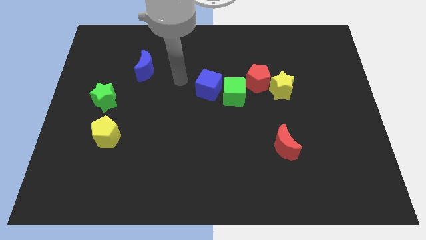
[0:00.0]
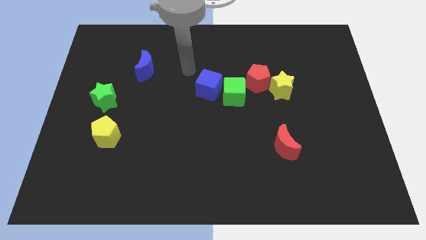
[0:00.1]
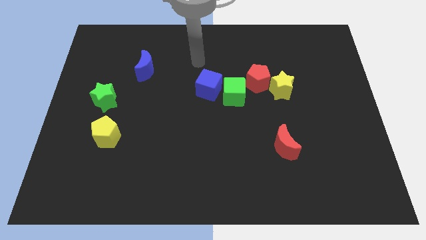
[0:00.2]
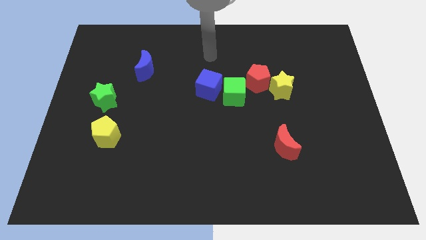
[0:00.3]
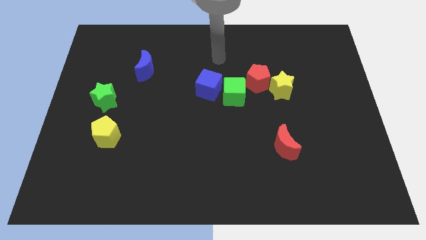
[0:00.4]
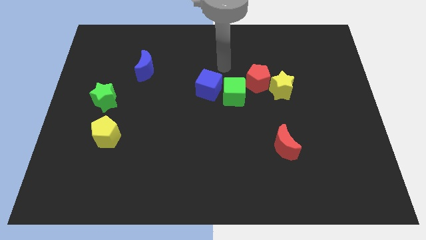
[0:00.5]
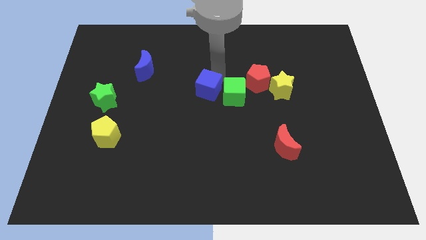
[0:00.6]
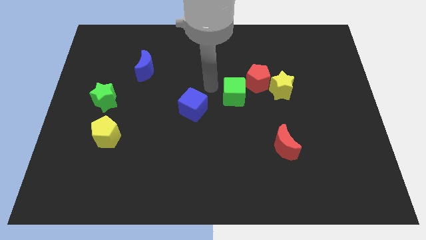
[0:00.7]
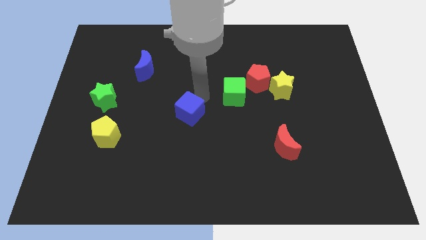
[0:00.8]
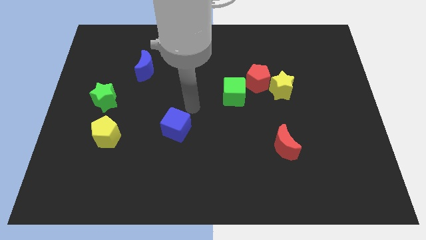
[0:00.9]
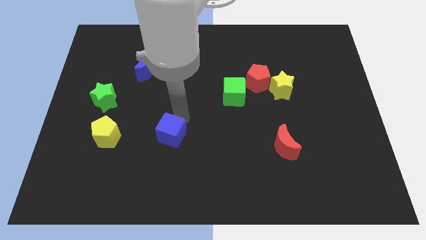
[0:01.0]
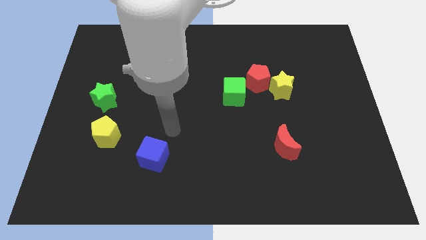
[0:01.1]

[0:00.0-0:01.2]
push the blue cube horizontally to the right of the yellow pentagon

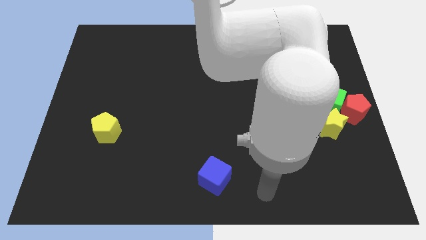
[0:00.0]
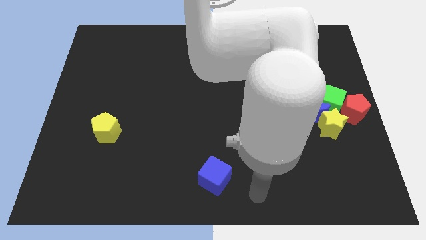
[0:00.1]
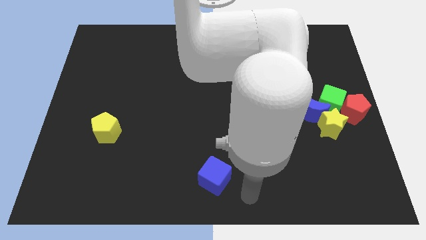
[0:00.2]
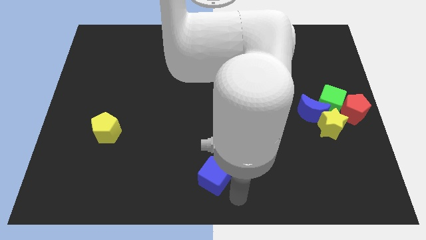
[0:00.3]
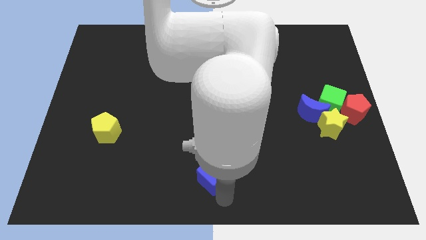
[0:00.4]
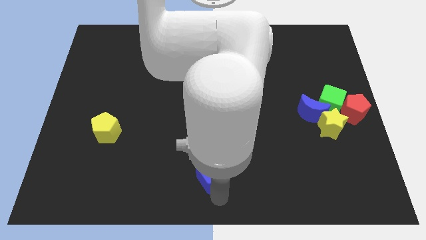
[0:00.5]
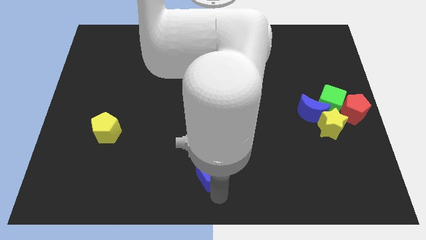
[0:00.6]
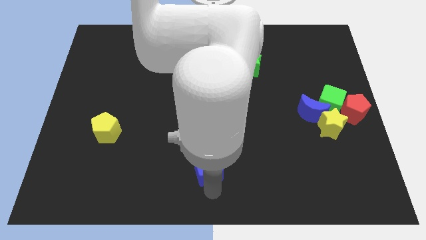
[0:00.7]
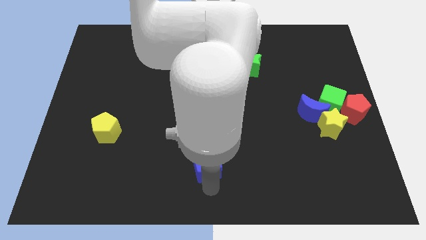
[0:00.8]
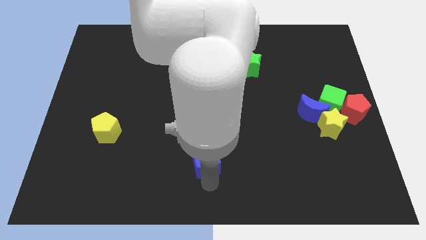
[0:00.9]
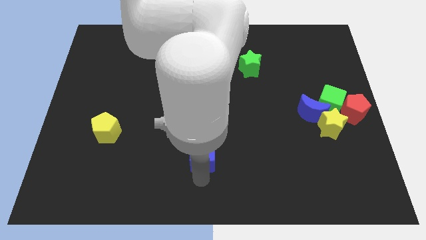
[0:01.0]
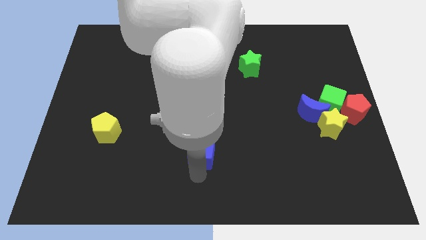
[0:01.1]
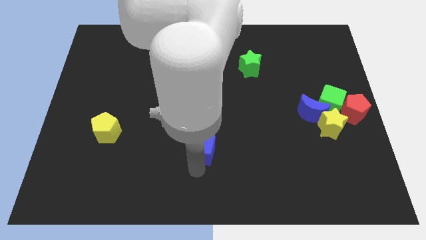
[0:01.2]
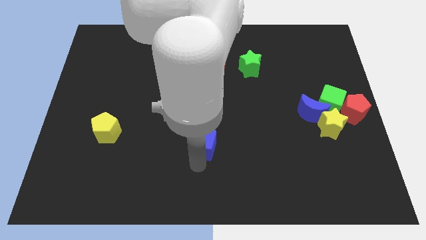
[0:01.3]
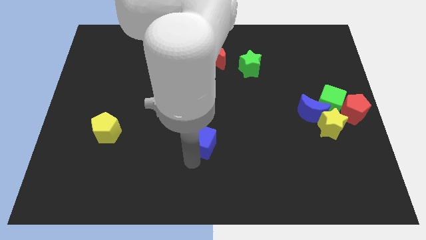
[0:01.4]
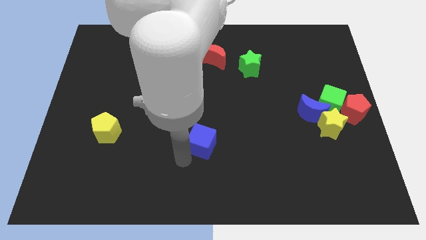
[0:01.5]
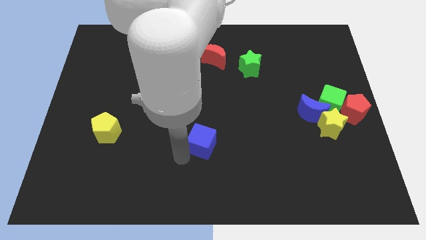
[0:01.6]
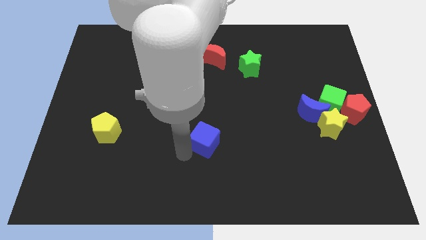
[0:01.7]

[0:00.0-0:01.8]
push the blue cube towards the center of the board

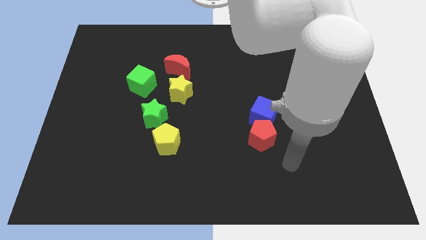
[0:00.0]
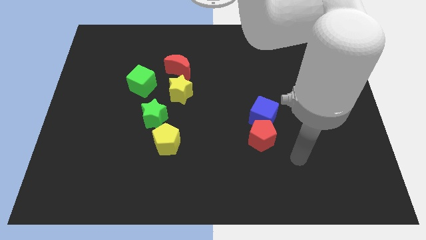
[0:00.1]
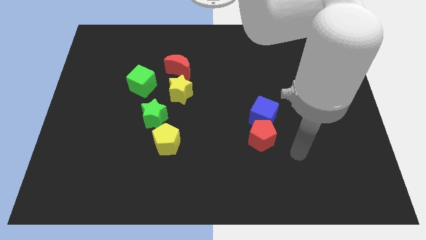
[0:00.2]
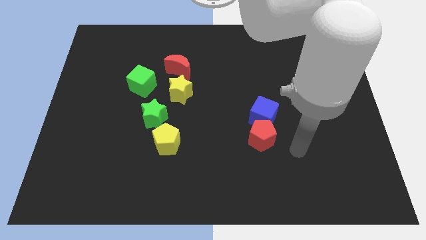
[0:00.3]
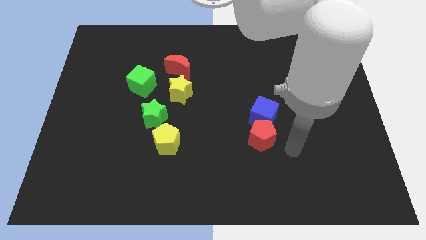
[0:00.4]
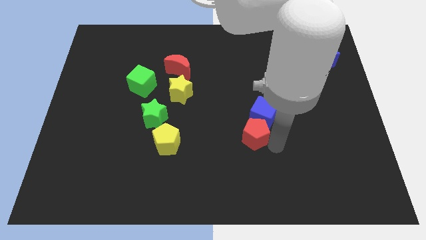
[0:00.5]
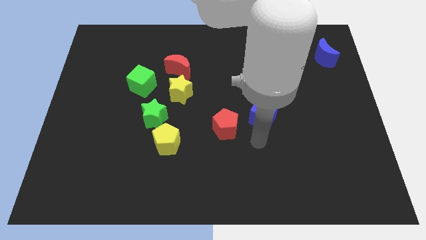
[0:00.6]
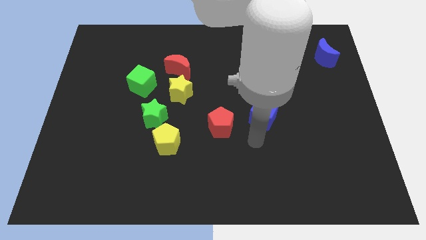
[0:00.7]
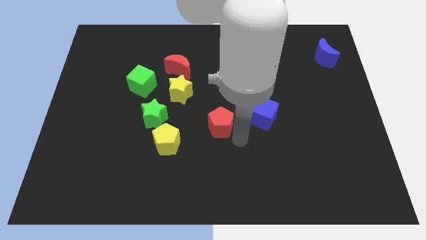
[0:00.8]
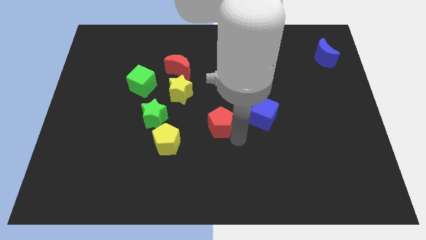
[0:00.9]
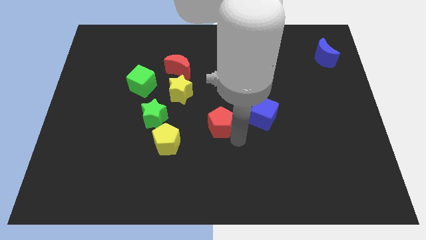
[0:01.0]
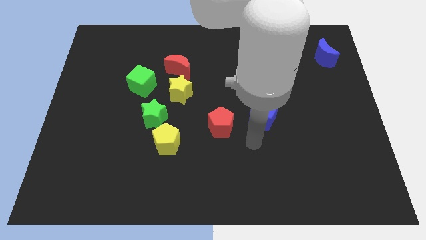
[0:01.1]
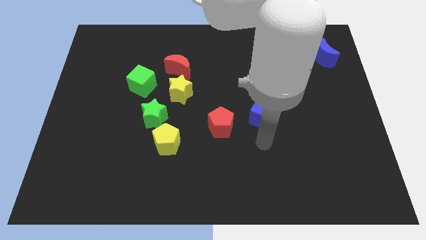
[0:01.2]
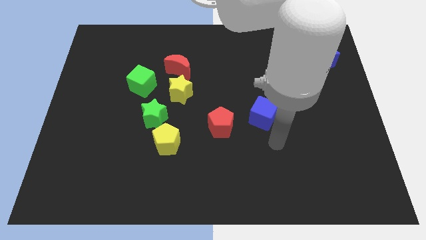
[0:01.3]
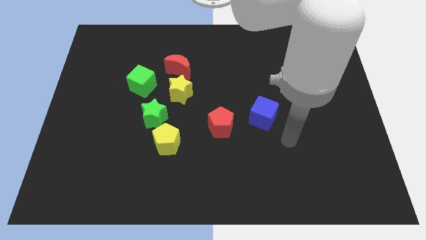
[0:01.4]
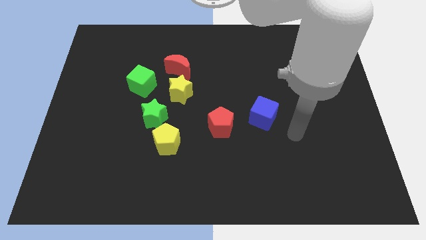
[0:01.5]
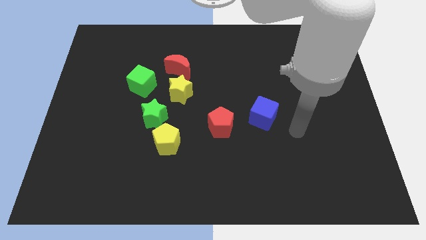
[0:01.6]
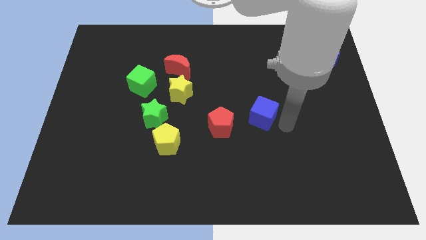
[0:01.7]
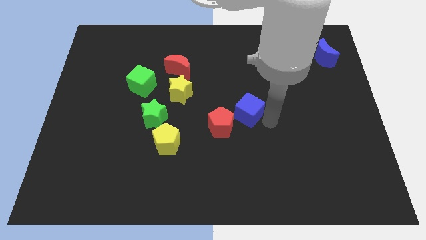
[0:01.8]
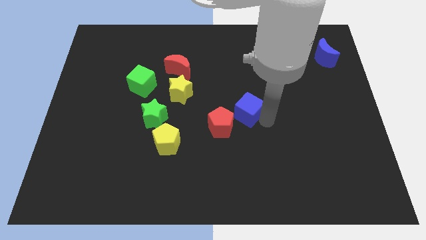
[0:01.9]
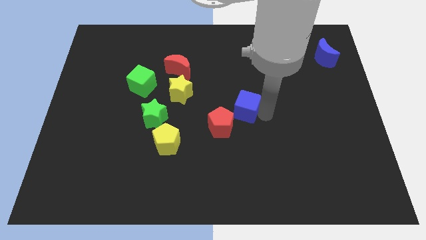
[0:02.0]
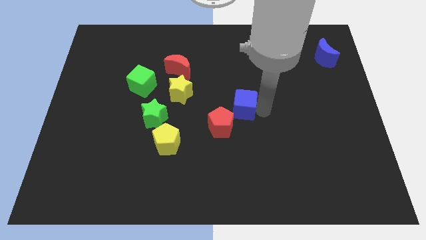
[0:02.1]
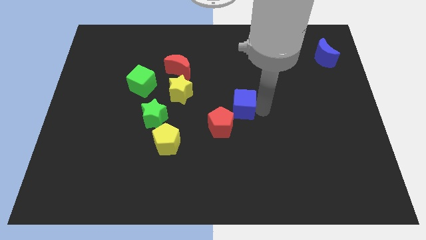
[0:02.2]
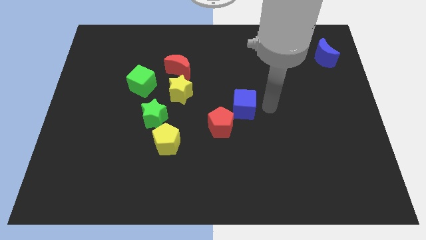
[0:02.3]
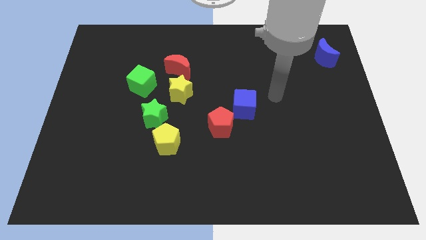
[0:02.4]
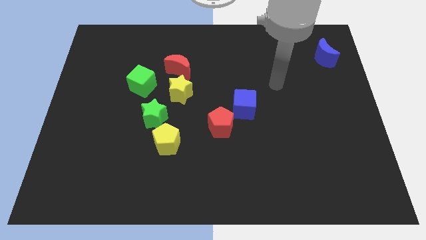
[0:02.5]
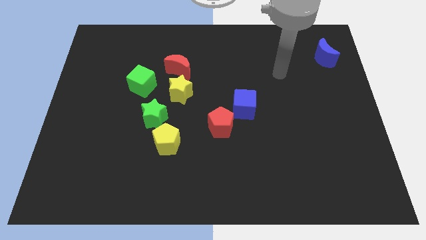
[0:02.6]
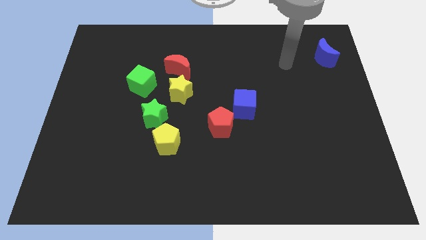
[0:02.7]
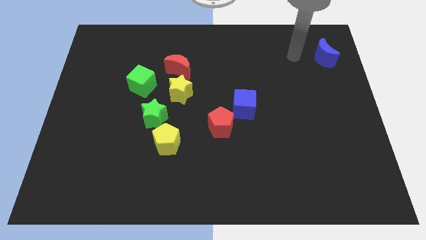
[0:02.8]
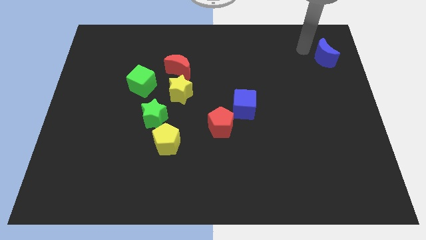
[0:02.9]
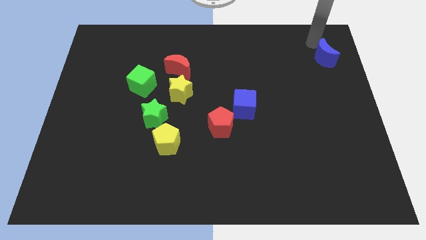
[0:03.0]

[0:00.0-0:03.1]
place blue cube to the top right of red pentagon

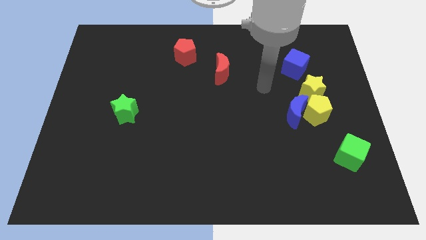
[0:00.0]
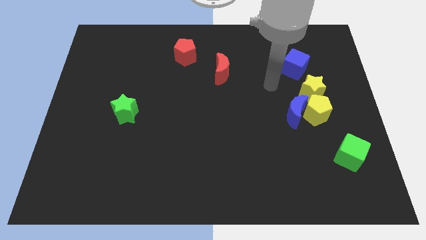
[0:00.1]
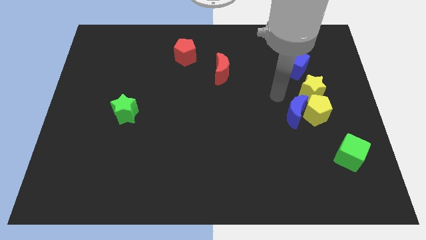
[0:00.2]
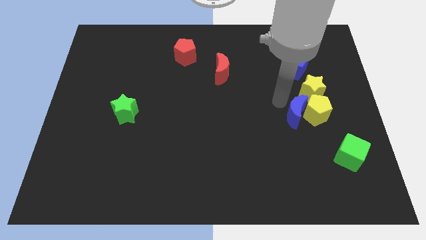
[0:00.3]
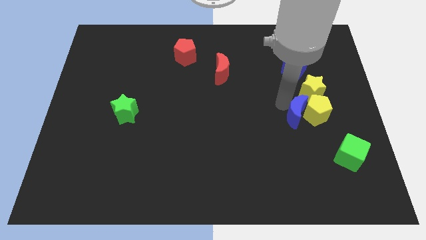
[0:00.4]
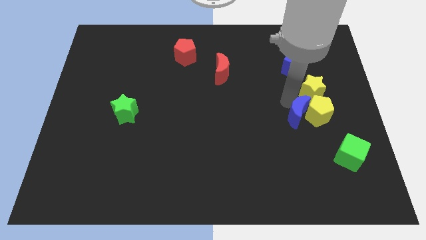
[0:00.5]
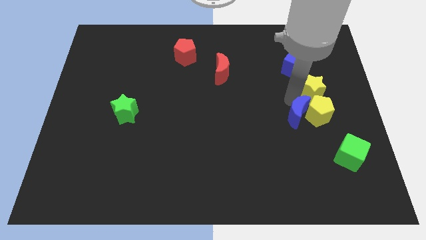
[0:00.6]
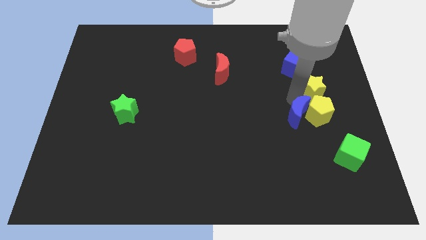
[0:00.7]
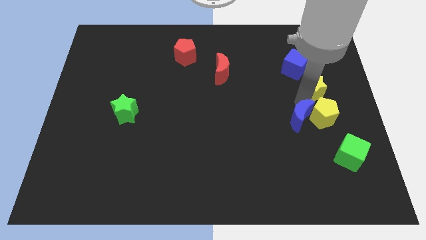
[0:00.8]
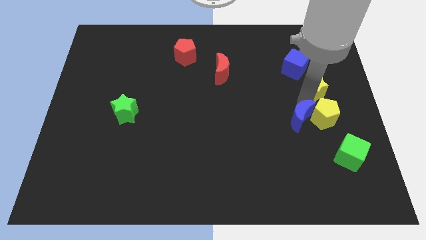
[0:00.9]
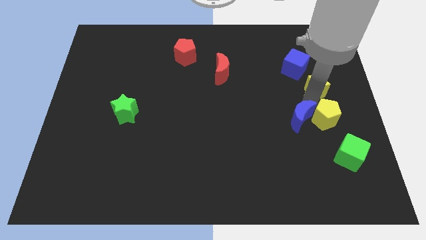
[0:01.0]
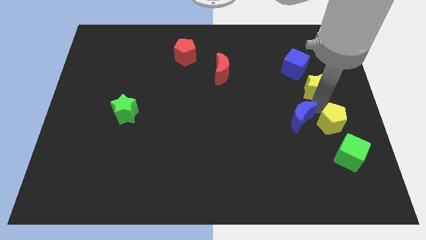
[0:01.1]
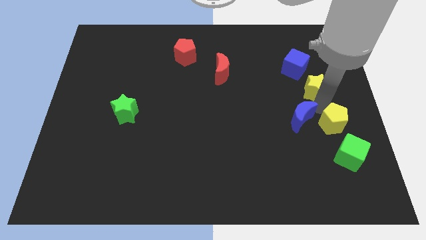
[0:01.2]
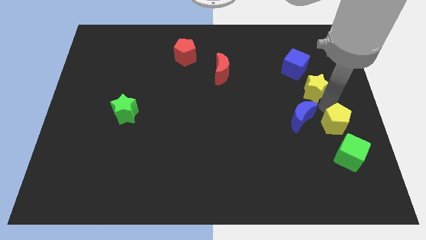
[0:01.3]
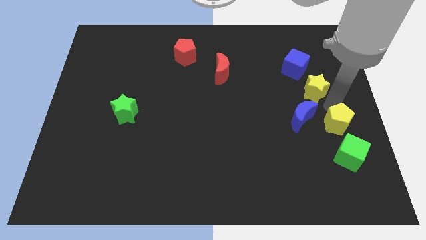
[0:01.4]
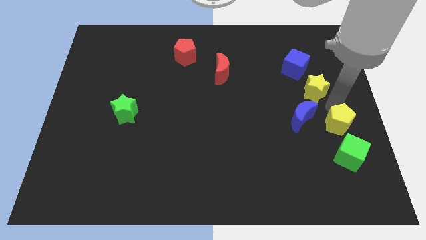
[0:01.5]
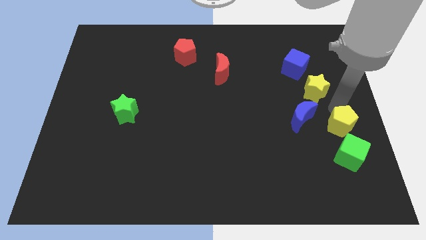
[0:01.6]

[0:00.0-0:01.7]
separate yellow pentagon from blue moon

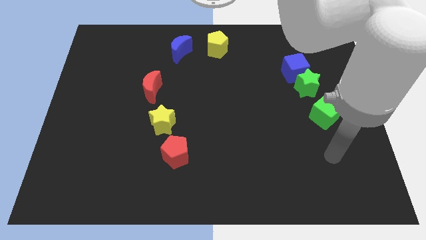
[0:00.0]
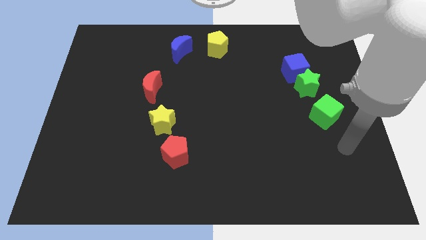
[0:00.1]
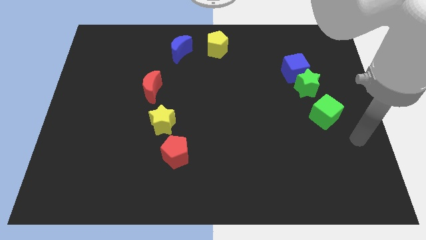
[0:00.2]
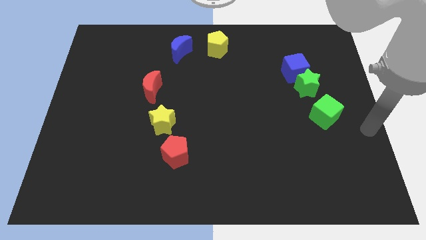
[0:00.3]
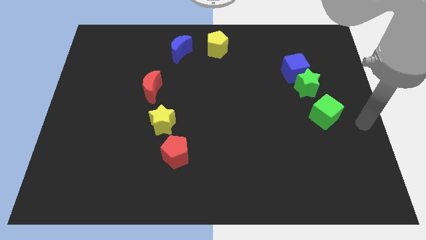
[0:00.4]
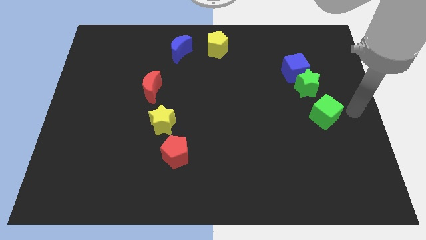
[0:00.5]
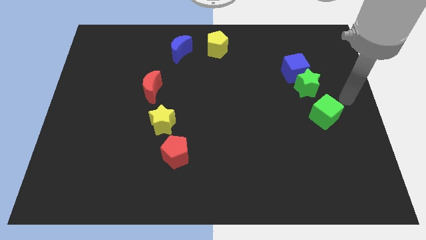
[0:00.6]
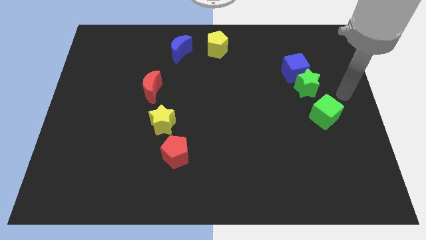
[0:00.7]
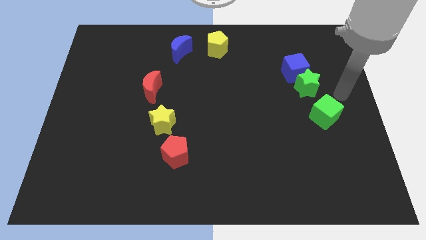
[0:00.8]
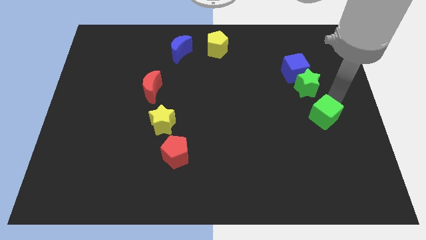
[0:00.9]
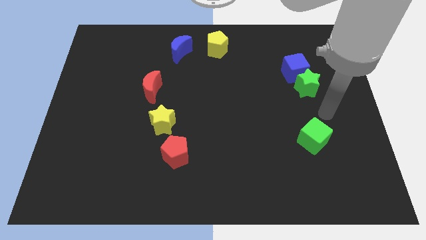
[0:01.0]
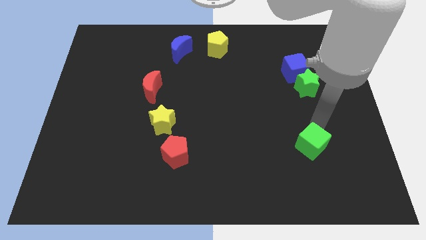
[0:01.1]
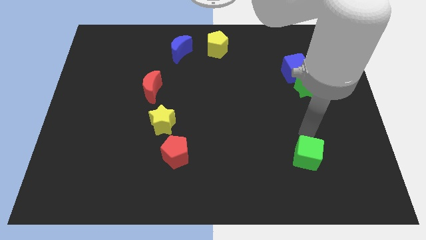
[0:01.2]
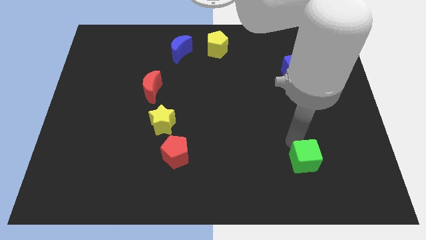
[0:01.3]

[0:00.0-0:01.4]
push the green cube towards the bottom of the board
